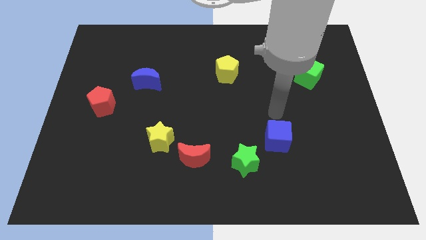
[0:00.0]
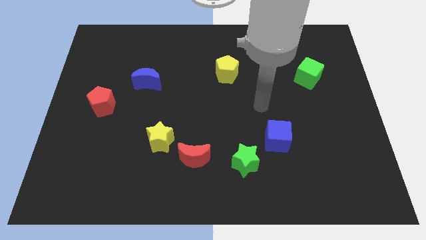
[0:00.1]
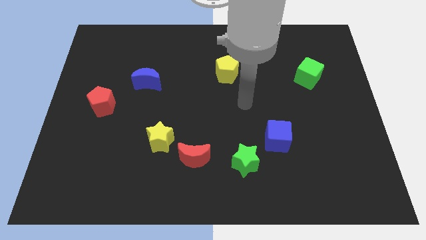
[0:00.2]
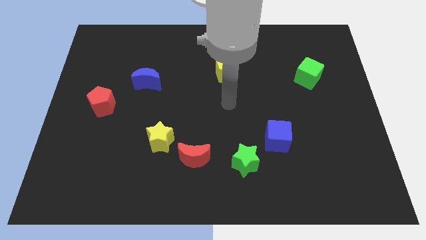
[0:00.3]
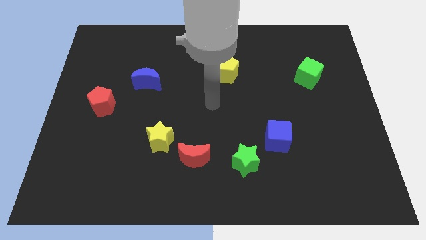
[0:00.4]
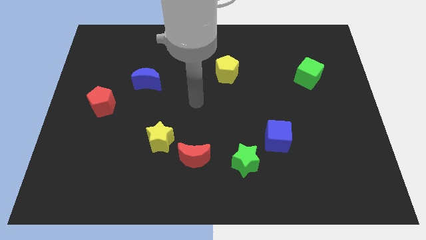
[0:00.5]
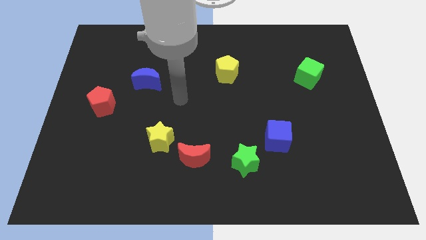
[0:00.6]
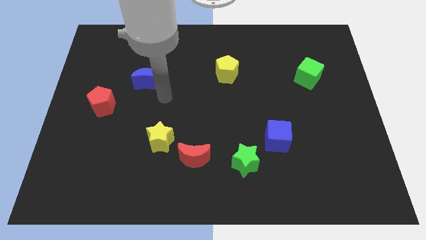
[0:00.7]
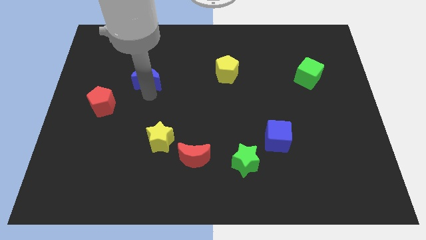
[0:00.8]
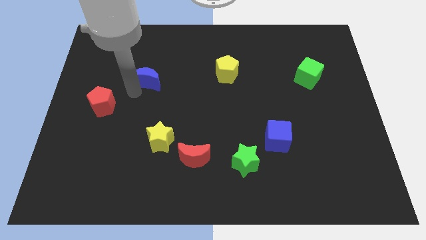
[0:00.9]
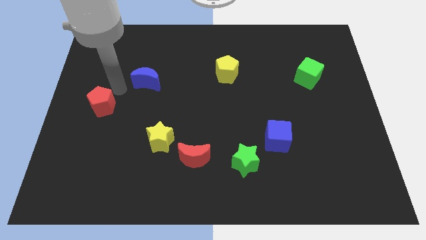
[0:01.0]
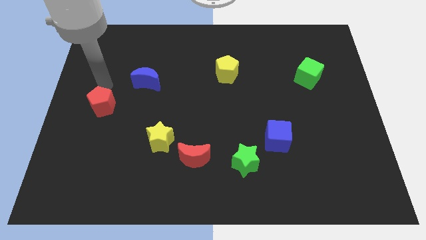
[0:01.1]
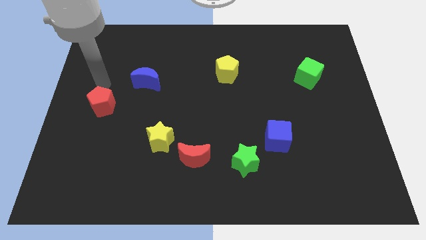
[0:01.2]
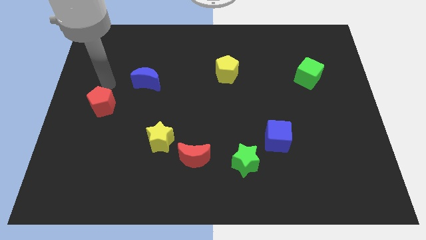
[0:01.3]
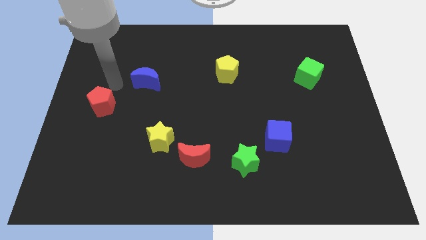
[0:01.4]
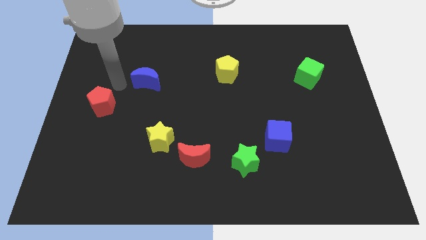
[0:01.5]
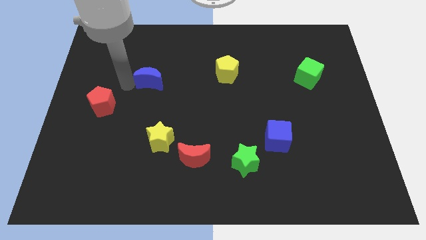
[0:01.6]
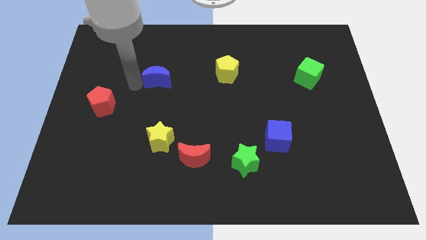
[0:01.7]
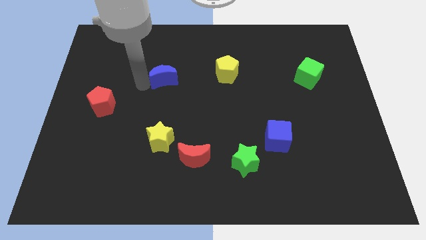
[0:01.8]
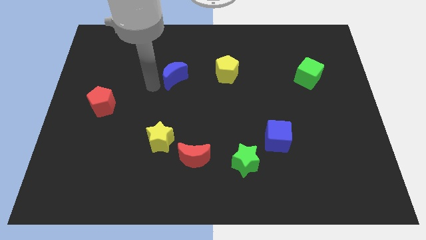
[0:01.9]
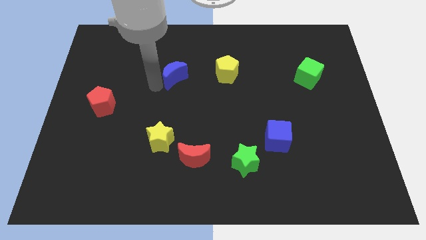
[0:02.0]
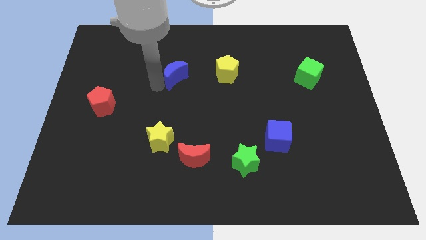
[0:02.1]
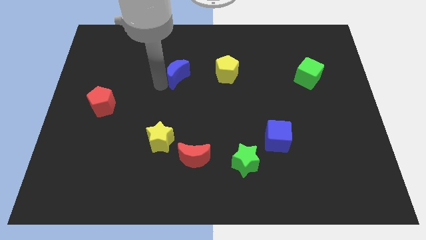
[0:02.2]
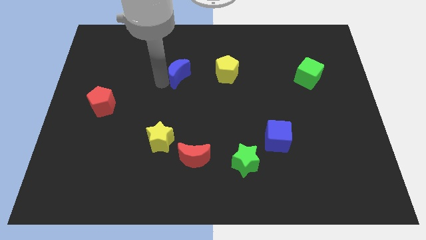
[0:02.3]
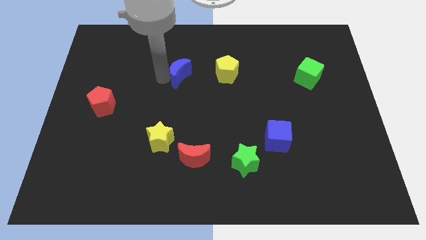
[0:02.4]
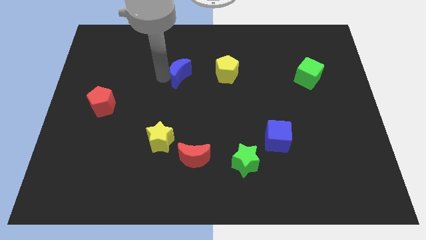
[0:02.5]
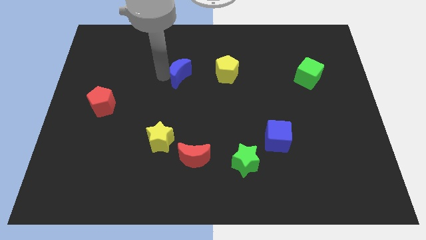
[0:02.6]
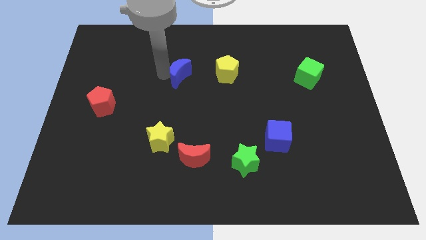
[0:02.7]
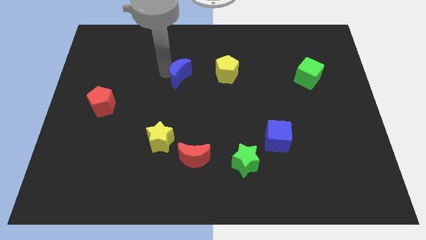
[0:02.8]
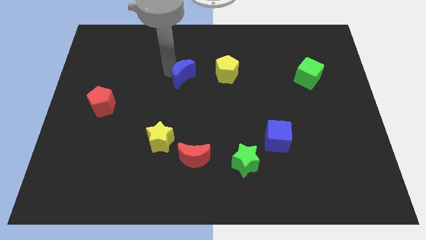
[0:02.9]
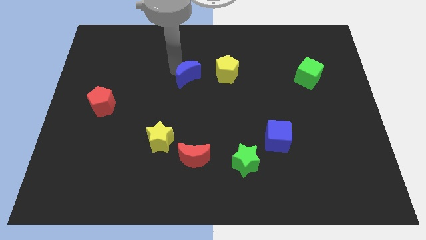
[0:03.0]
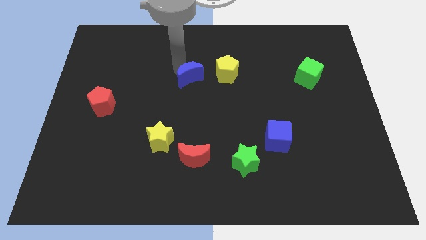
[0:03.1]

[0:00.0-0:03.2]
slide the blue moon left to the yellow pentagon

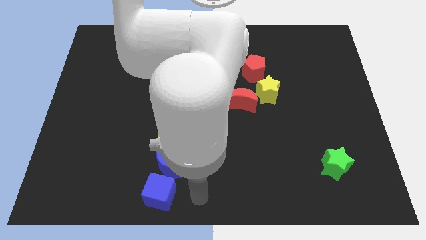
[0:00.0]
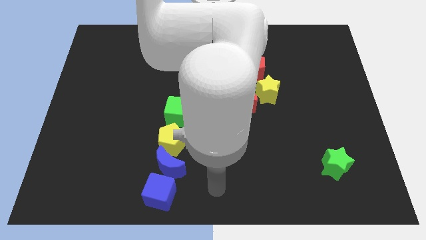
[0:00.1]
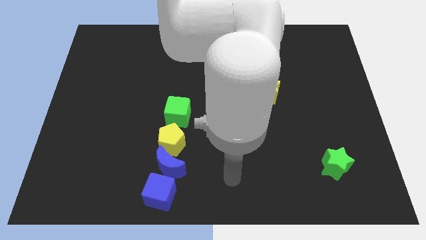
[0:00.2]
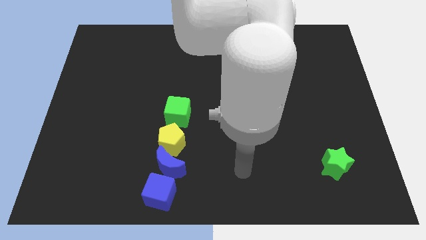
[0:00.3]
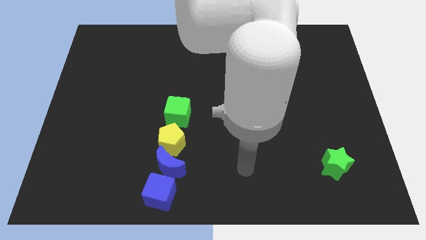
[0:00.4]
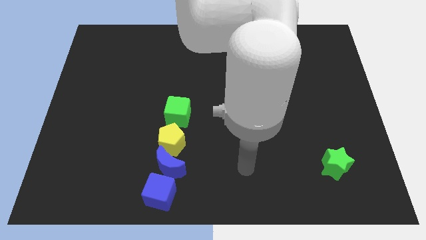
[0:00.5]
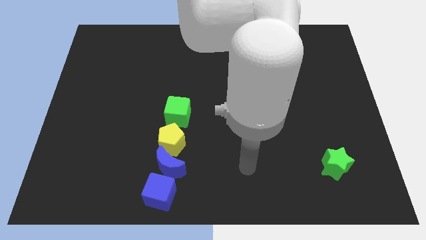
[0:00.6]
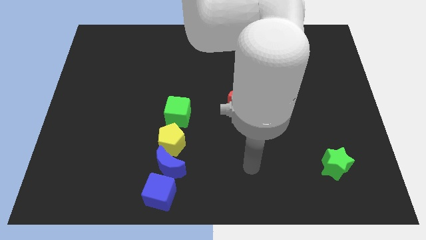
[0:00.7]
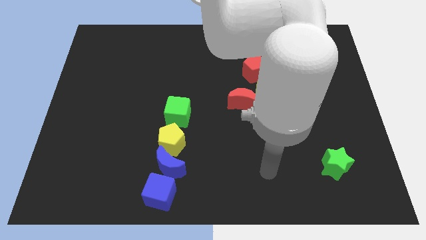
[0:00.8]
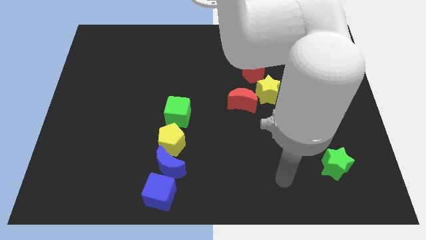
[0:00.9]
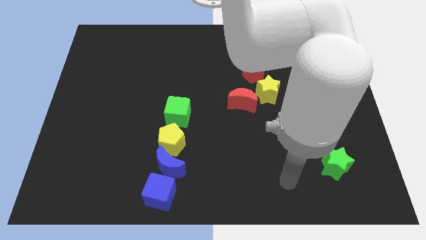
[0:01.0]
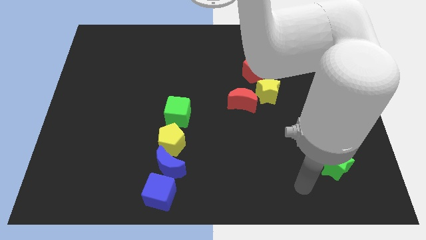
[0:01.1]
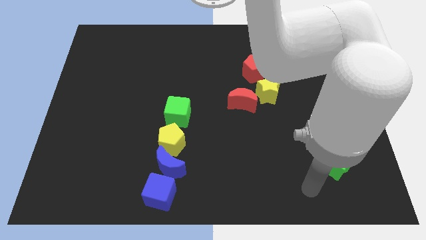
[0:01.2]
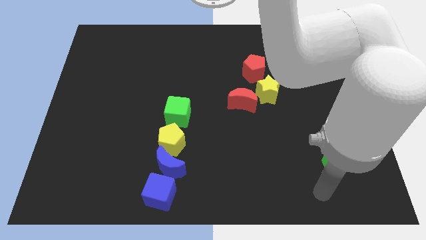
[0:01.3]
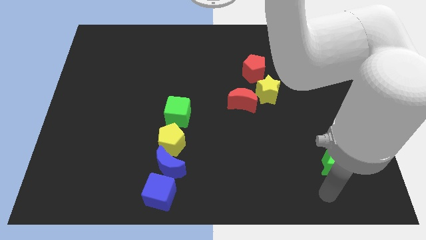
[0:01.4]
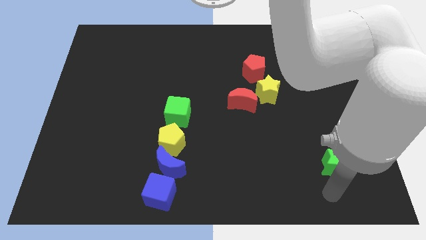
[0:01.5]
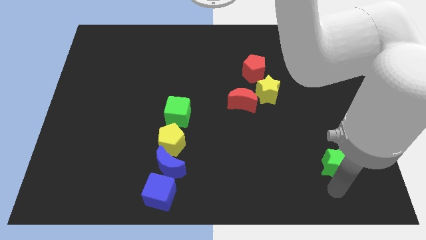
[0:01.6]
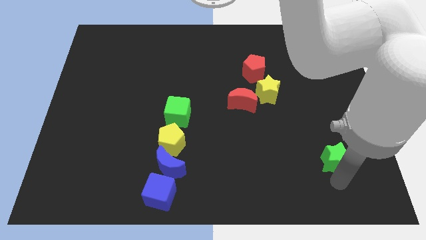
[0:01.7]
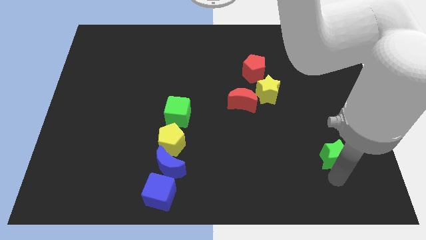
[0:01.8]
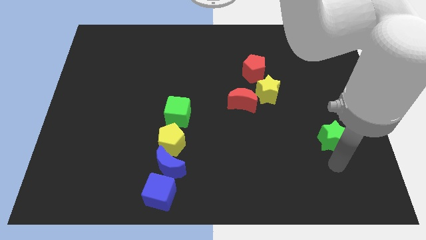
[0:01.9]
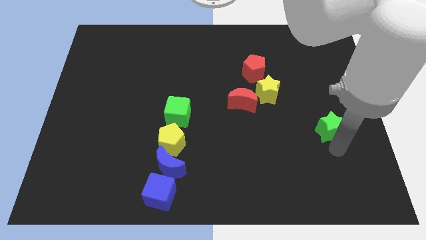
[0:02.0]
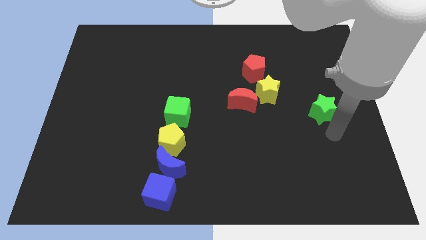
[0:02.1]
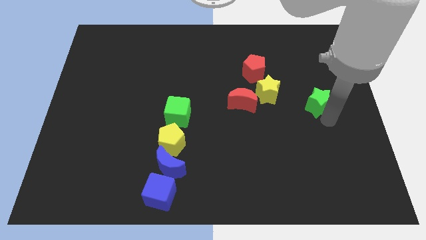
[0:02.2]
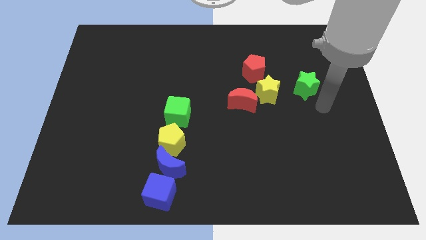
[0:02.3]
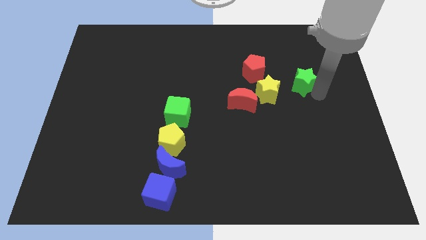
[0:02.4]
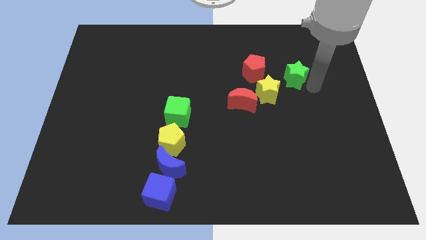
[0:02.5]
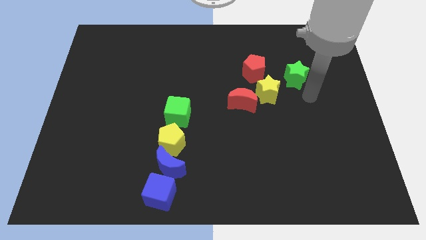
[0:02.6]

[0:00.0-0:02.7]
place the green star diagonally to yellow star

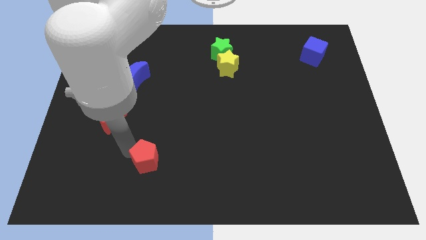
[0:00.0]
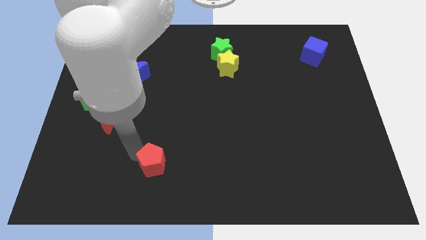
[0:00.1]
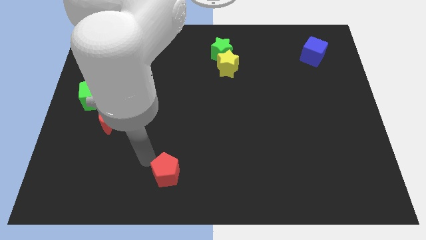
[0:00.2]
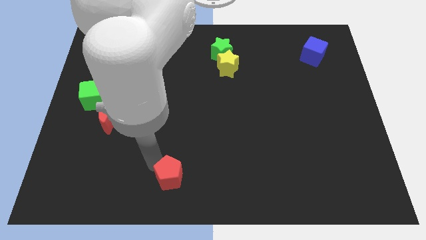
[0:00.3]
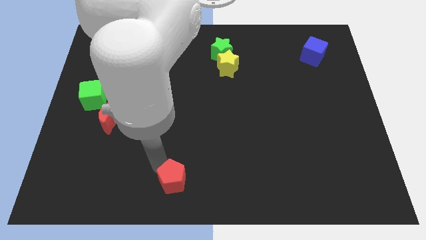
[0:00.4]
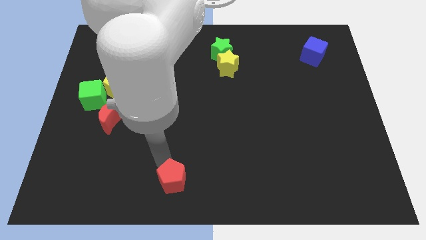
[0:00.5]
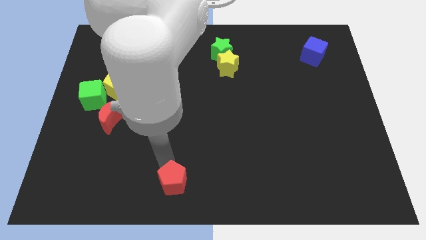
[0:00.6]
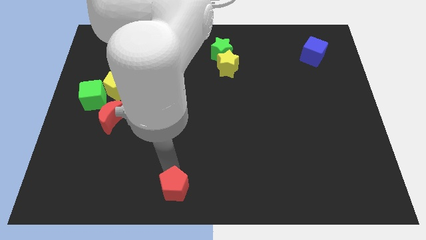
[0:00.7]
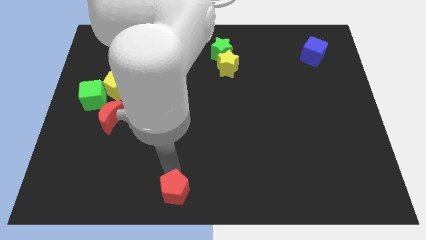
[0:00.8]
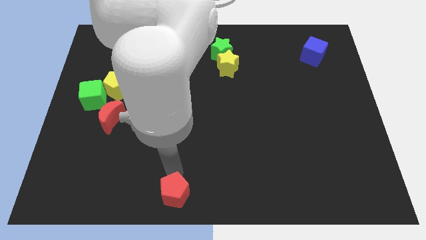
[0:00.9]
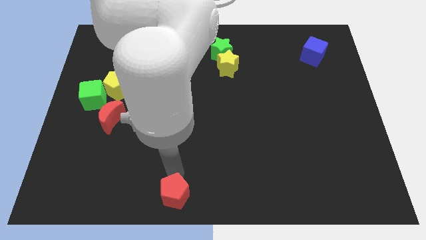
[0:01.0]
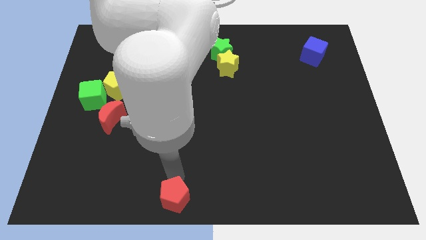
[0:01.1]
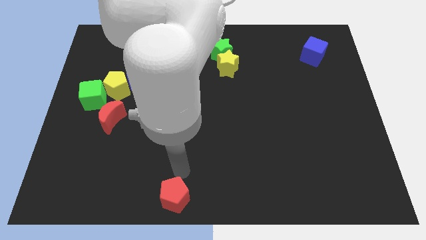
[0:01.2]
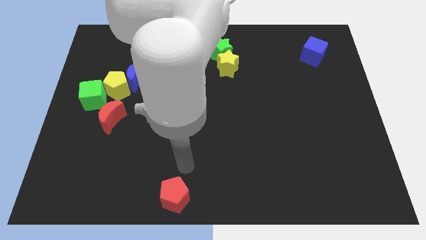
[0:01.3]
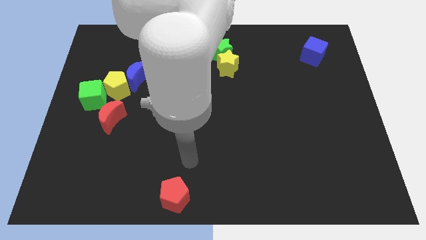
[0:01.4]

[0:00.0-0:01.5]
place the red pentagon towards downwards

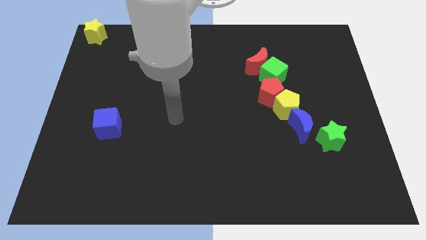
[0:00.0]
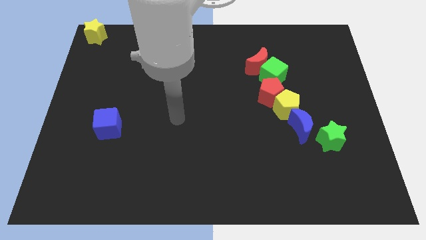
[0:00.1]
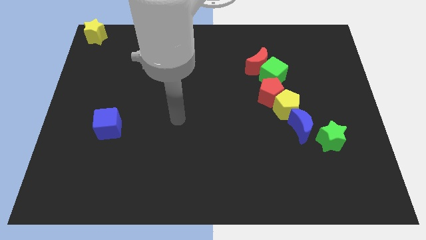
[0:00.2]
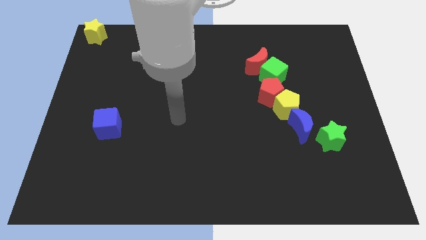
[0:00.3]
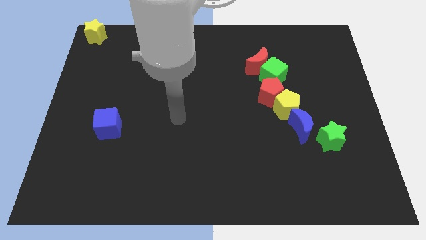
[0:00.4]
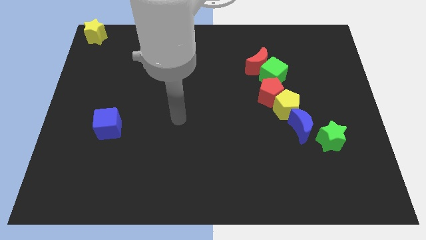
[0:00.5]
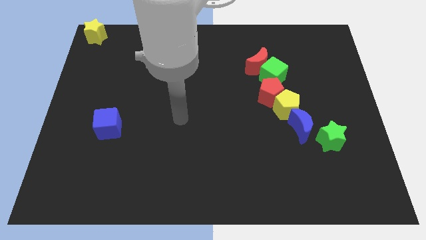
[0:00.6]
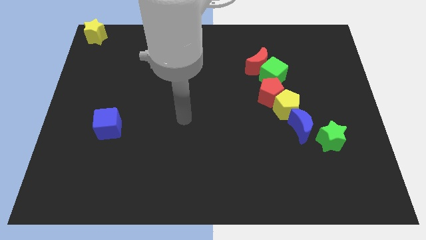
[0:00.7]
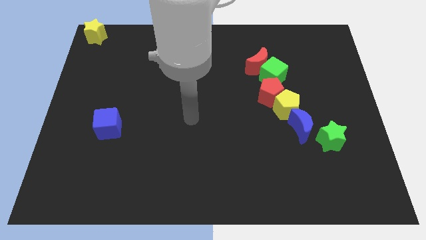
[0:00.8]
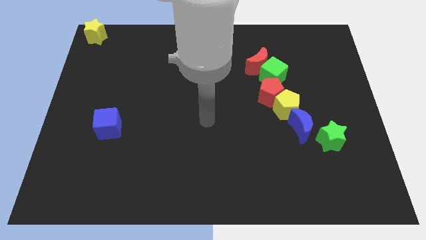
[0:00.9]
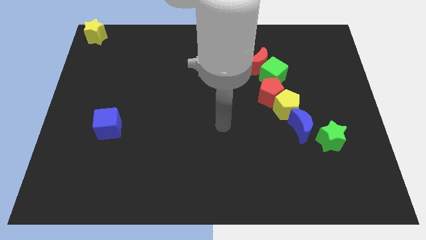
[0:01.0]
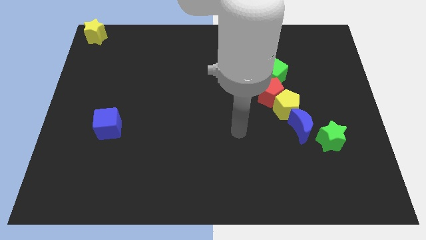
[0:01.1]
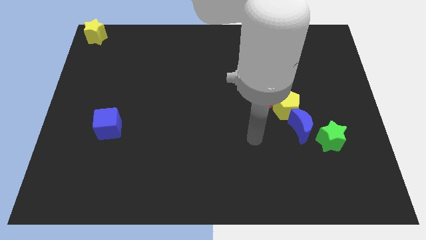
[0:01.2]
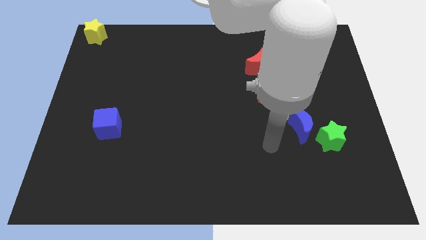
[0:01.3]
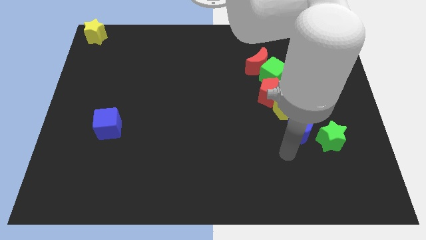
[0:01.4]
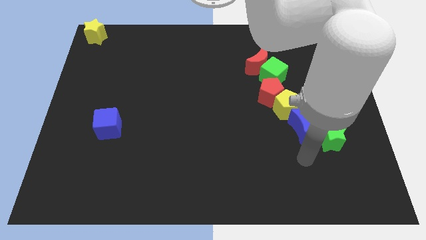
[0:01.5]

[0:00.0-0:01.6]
point your hand at the bottom side of the blue moon

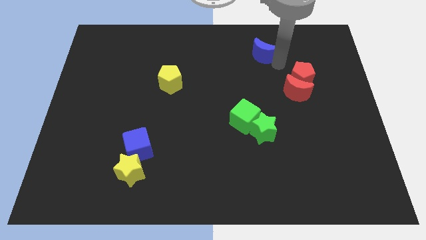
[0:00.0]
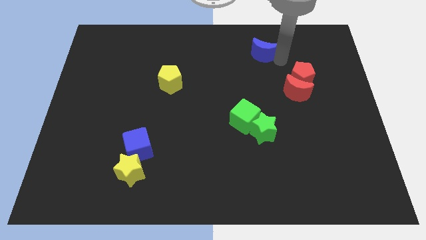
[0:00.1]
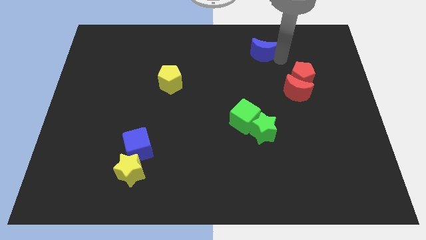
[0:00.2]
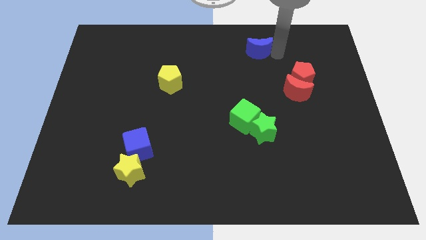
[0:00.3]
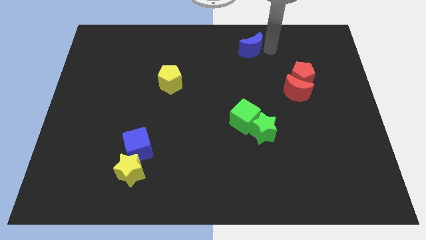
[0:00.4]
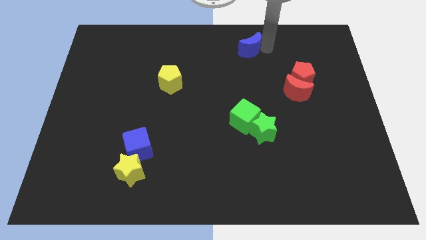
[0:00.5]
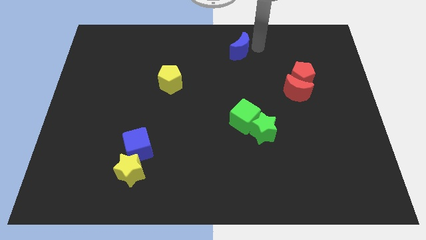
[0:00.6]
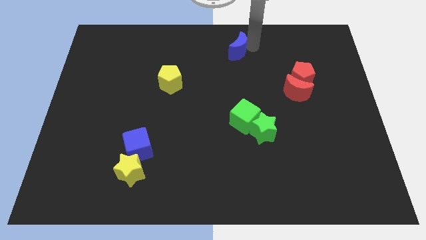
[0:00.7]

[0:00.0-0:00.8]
push the blue crescent to the left of the board
